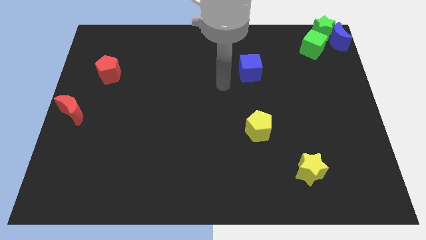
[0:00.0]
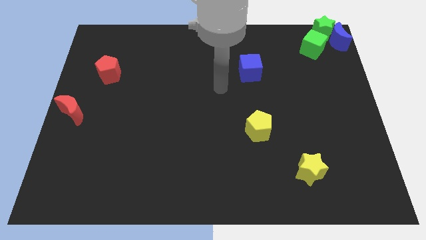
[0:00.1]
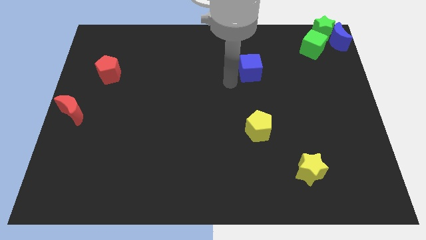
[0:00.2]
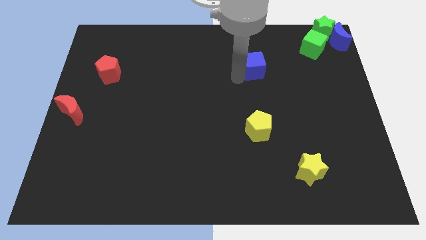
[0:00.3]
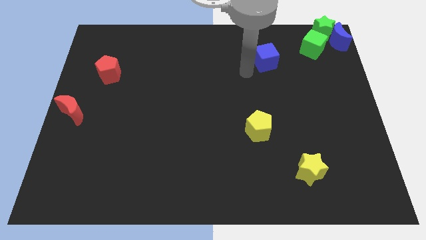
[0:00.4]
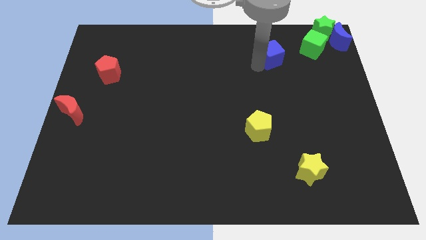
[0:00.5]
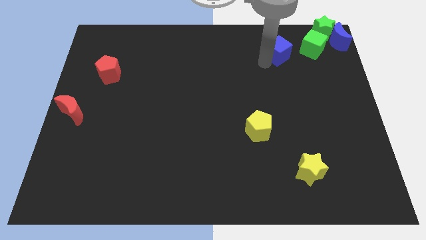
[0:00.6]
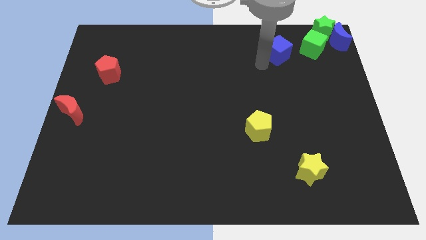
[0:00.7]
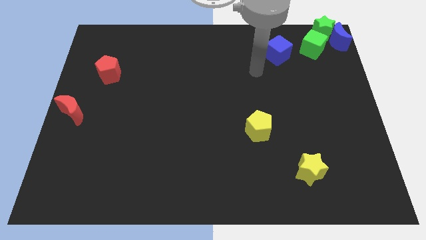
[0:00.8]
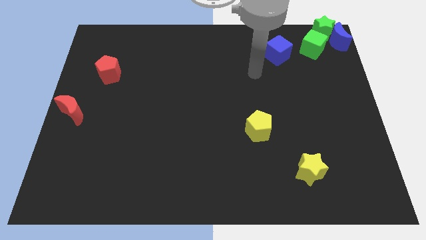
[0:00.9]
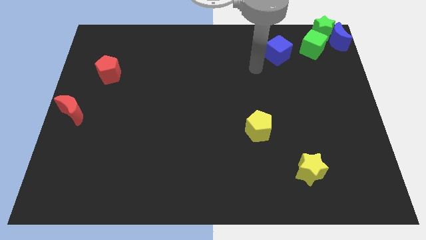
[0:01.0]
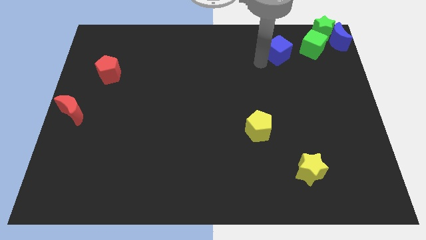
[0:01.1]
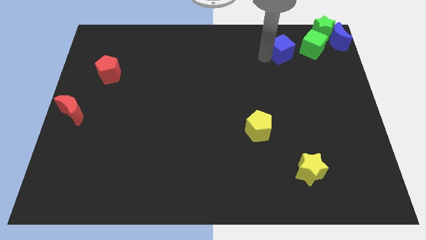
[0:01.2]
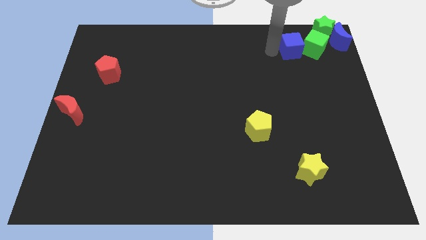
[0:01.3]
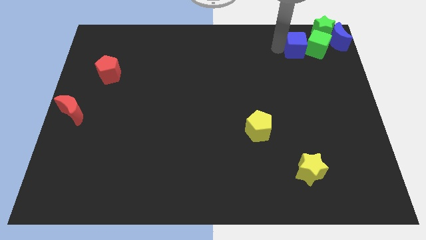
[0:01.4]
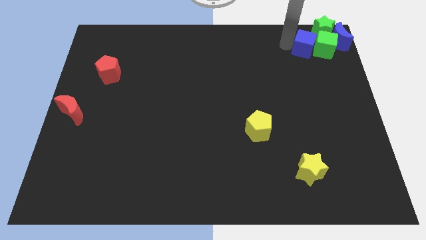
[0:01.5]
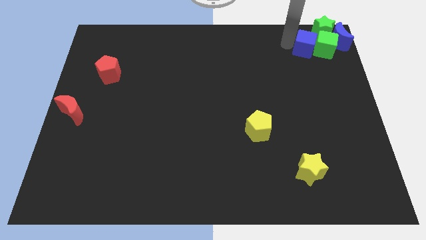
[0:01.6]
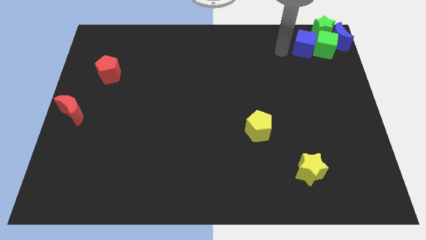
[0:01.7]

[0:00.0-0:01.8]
put the blue cube into the green cube

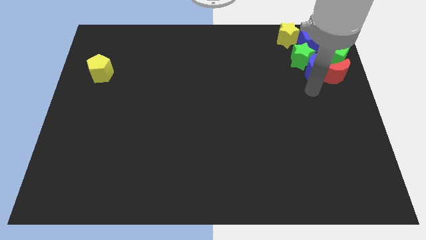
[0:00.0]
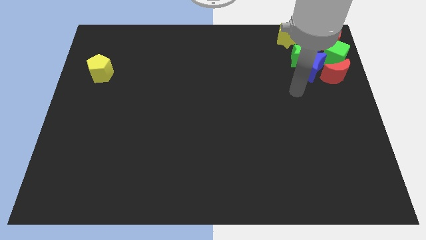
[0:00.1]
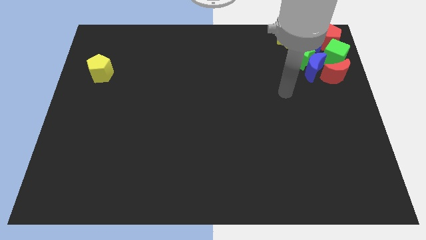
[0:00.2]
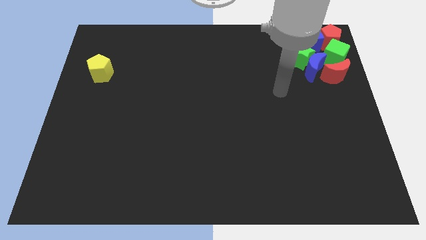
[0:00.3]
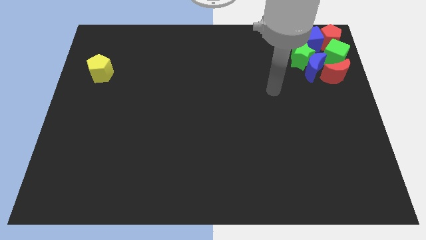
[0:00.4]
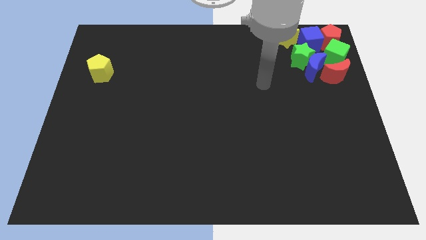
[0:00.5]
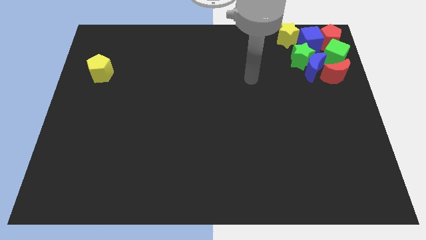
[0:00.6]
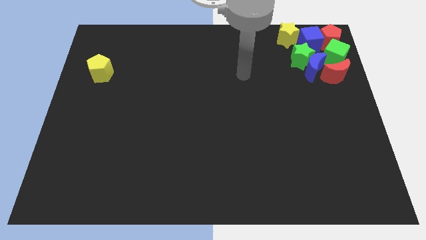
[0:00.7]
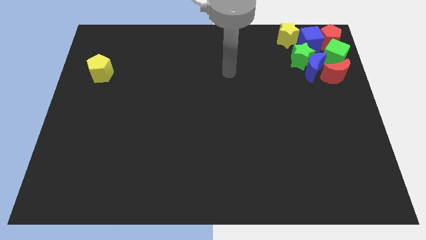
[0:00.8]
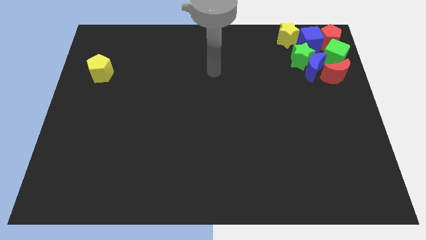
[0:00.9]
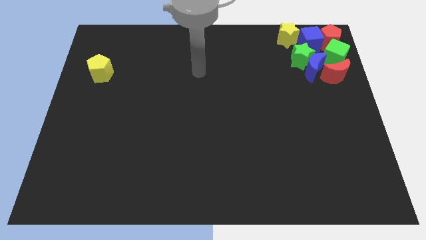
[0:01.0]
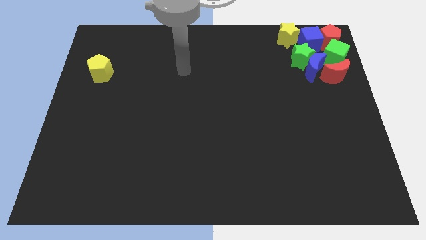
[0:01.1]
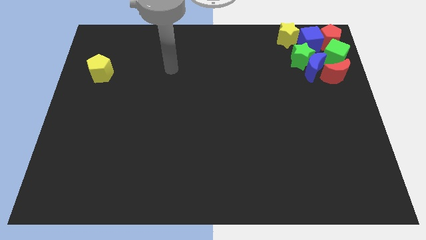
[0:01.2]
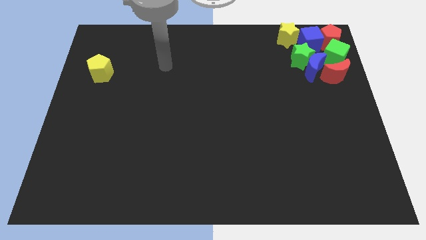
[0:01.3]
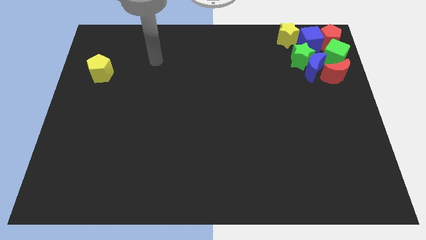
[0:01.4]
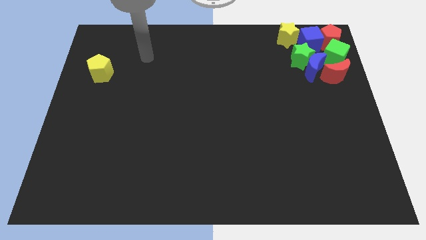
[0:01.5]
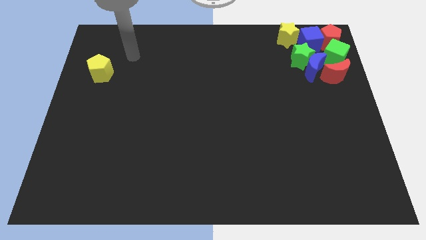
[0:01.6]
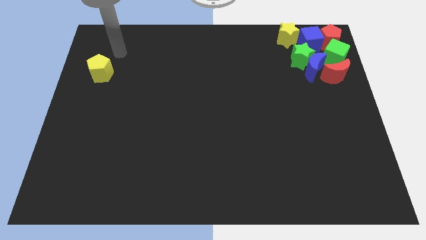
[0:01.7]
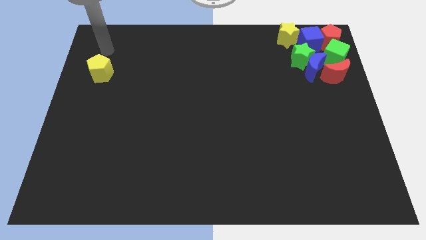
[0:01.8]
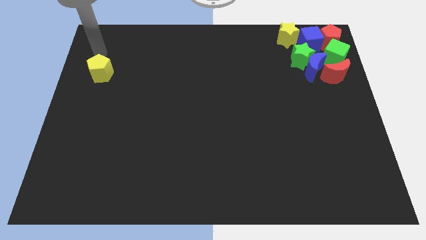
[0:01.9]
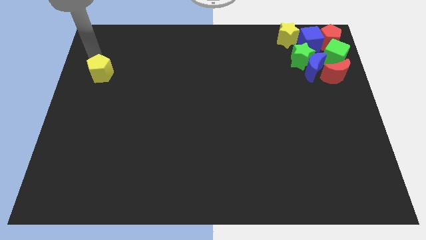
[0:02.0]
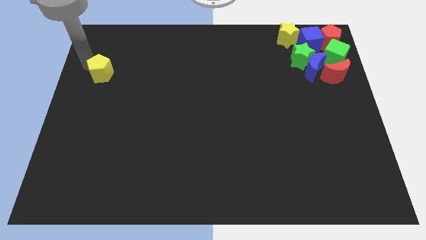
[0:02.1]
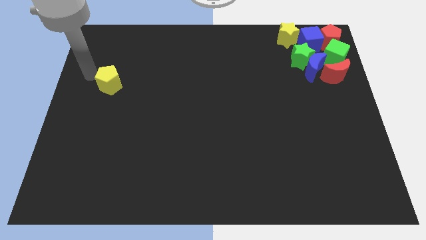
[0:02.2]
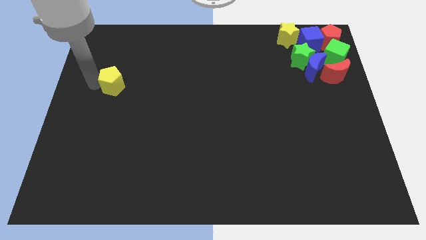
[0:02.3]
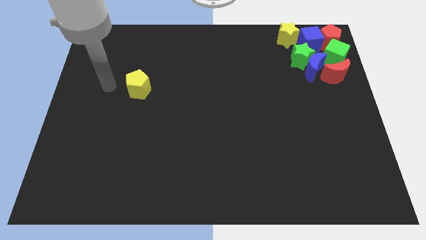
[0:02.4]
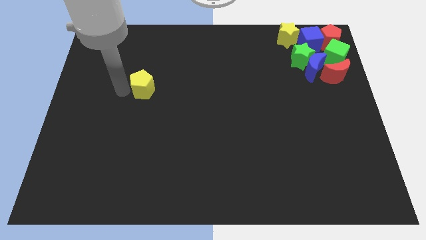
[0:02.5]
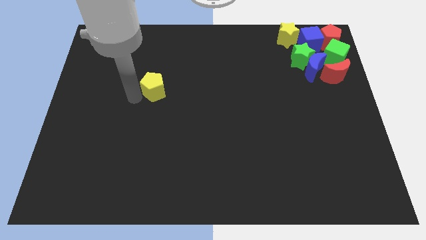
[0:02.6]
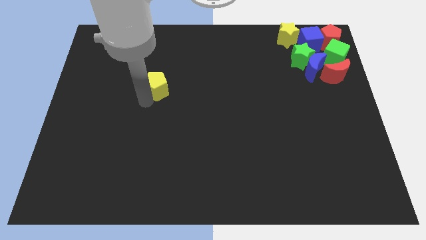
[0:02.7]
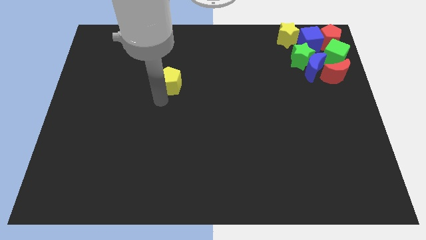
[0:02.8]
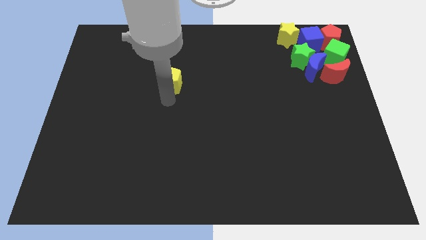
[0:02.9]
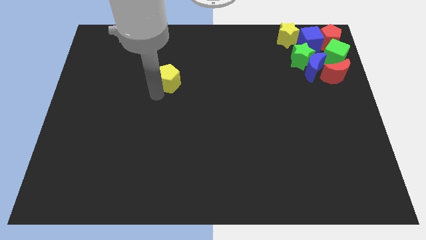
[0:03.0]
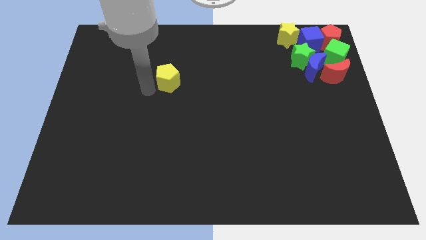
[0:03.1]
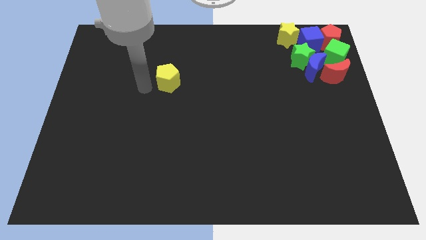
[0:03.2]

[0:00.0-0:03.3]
move the yellow pentagon towards right

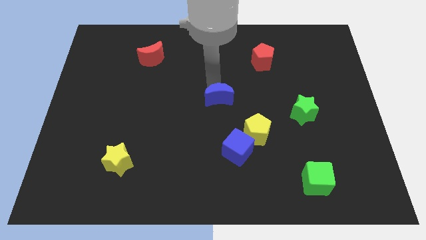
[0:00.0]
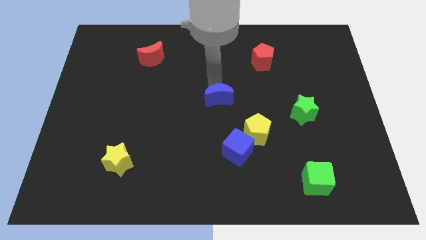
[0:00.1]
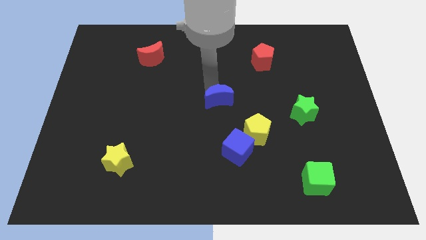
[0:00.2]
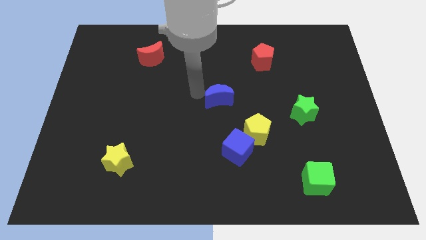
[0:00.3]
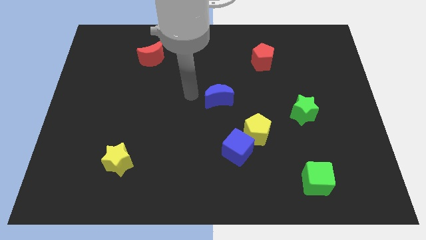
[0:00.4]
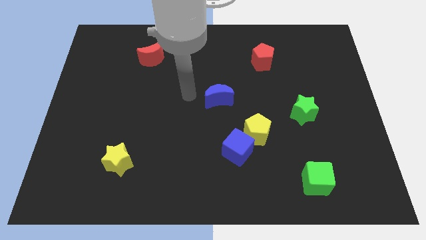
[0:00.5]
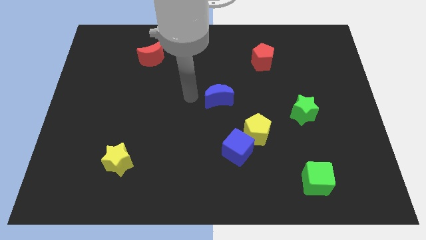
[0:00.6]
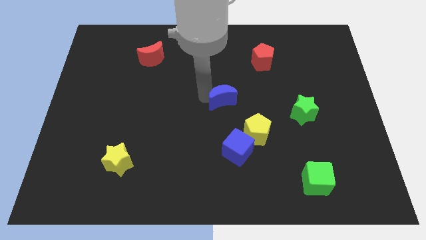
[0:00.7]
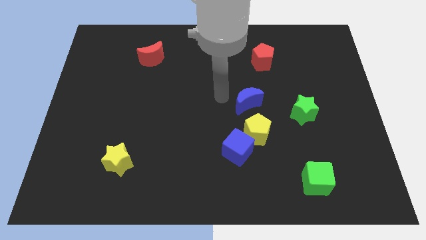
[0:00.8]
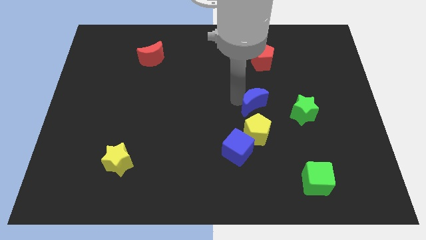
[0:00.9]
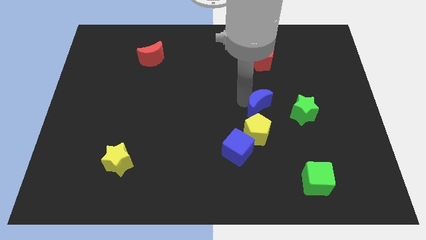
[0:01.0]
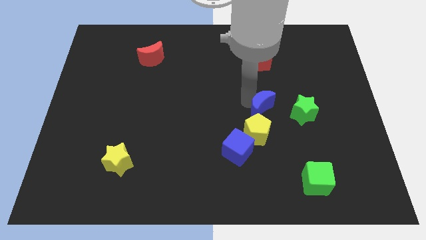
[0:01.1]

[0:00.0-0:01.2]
move the blue crescent at the top side of the yellow pentagon

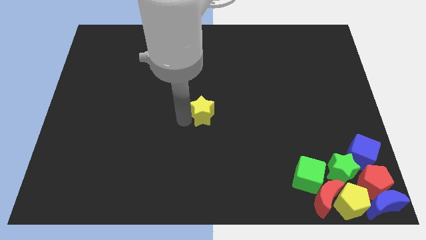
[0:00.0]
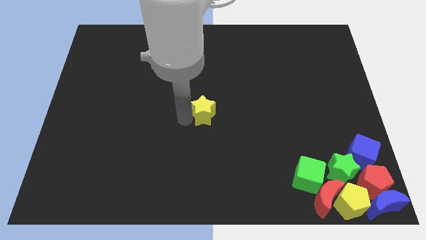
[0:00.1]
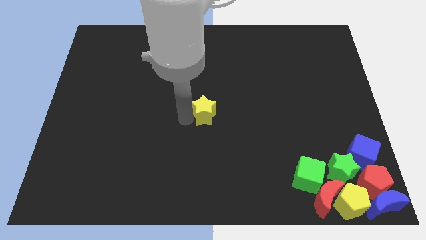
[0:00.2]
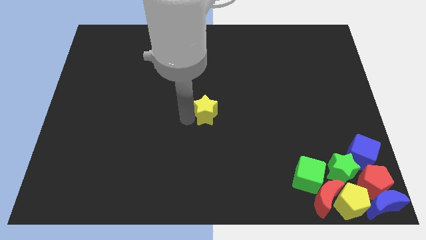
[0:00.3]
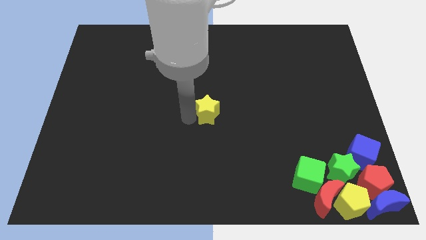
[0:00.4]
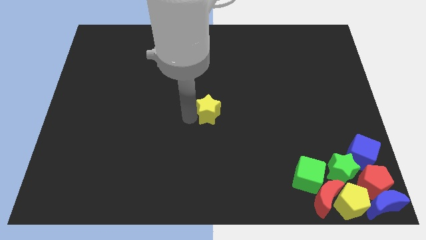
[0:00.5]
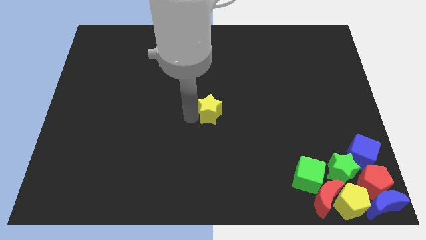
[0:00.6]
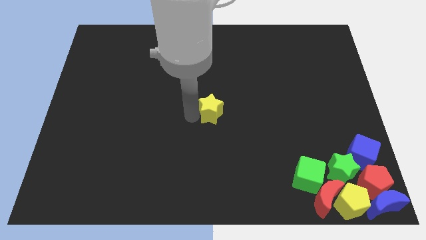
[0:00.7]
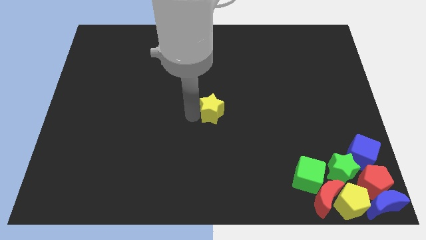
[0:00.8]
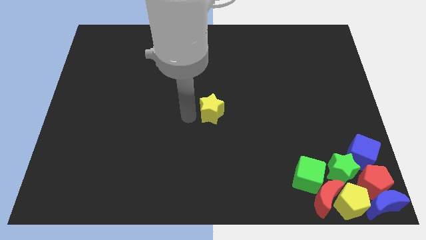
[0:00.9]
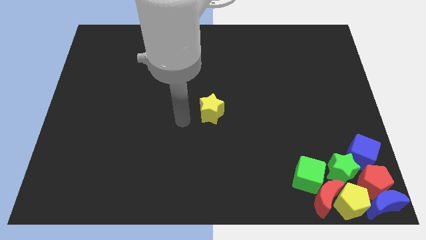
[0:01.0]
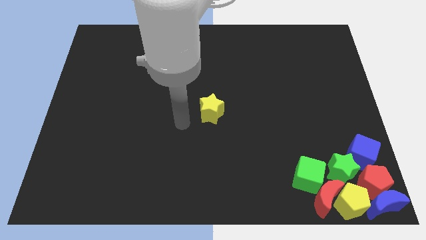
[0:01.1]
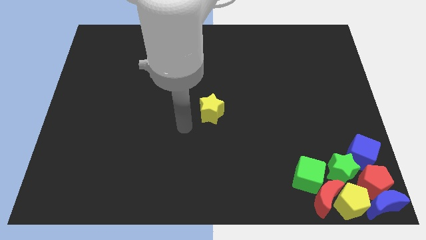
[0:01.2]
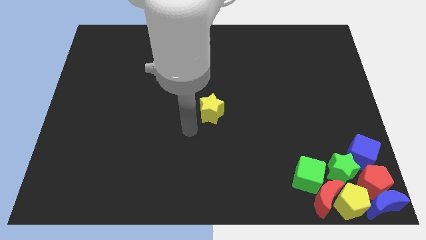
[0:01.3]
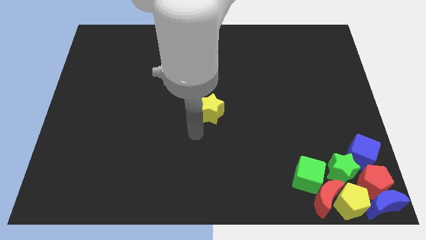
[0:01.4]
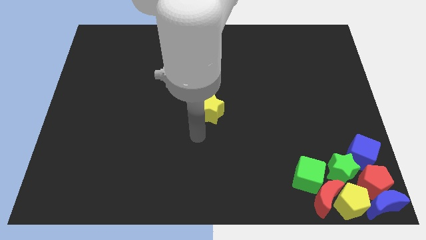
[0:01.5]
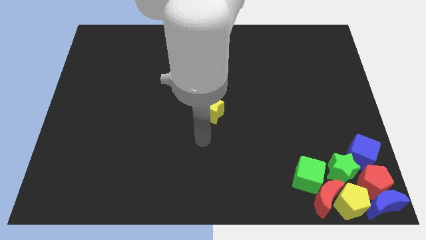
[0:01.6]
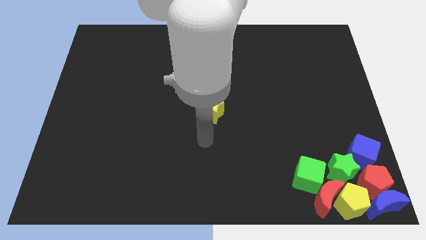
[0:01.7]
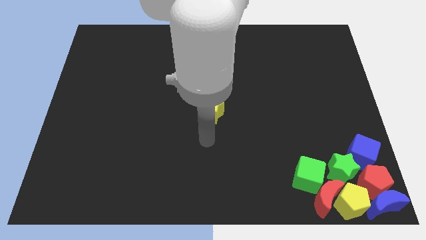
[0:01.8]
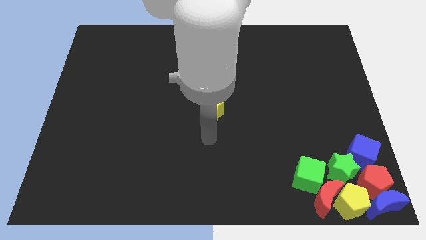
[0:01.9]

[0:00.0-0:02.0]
place the yellow star at the center of the board

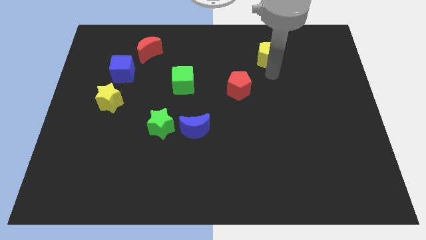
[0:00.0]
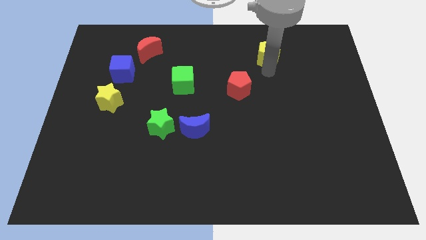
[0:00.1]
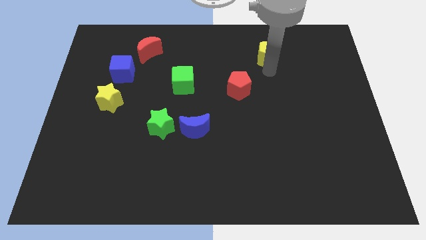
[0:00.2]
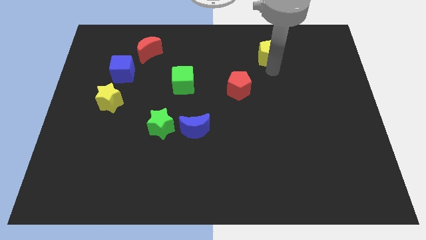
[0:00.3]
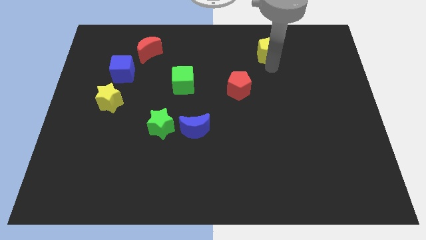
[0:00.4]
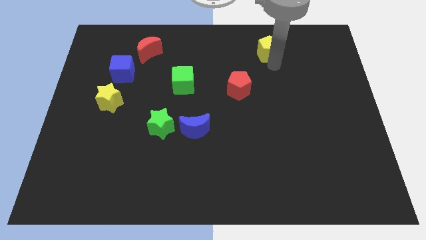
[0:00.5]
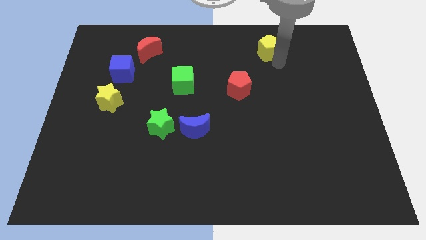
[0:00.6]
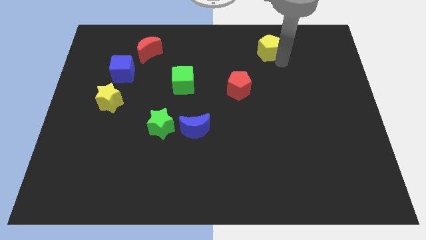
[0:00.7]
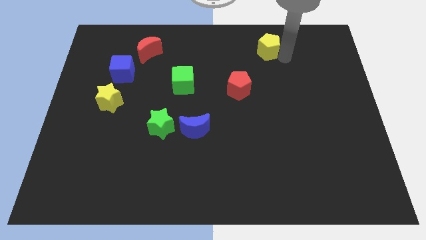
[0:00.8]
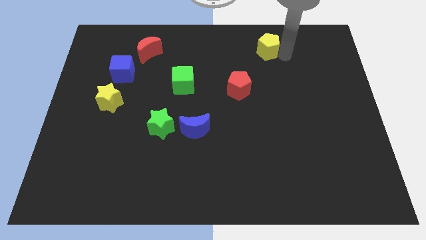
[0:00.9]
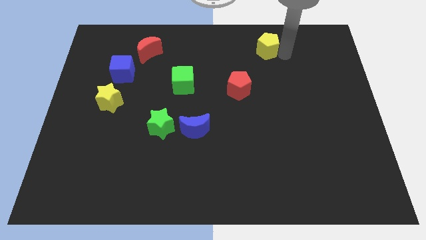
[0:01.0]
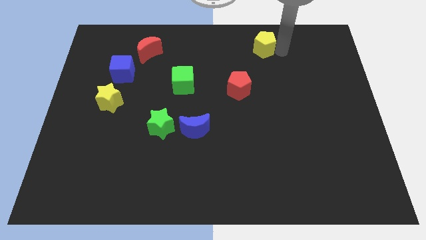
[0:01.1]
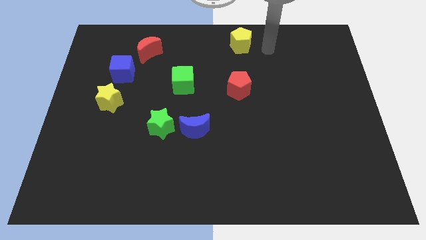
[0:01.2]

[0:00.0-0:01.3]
place yellow pentagon parallel to red pentagon
